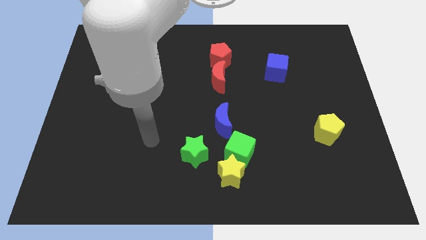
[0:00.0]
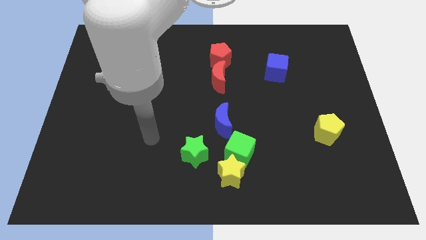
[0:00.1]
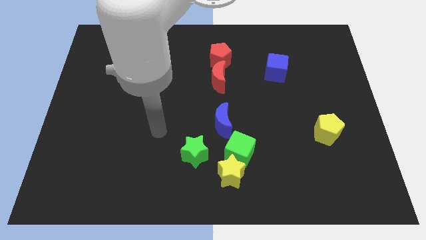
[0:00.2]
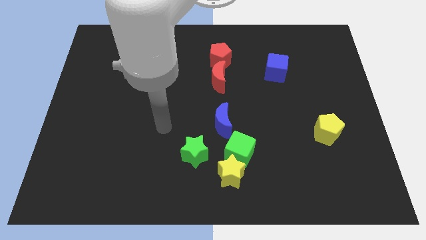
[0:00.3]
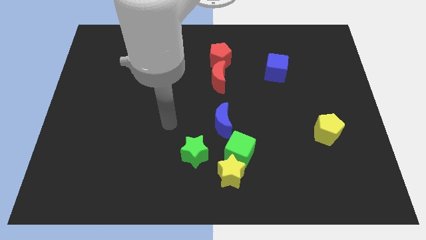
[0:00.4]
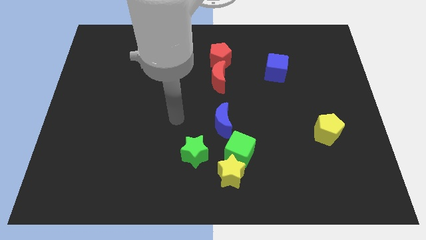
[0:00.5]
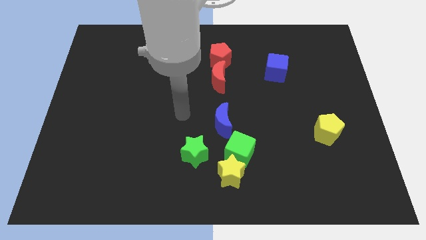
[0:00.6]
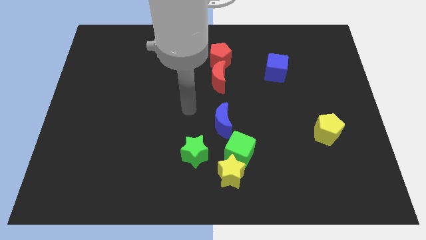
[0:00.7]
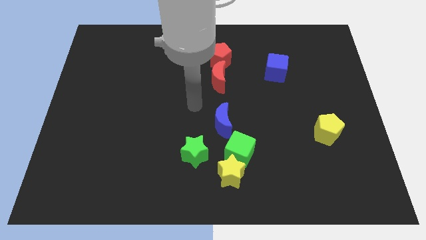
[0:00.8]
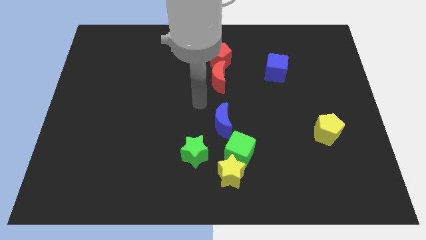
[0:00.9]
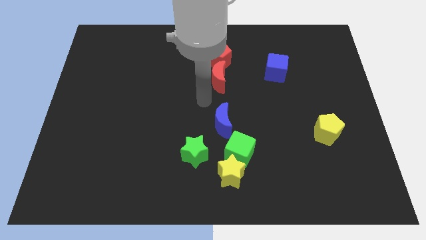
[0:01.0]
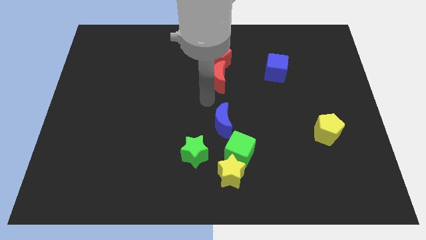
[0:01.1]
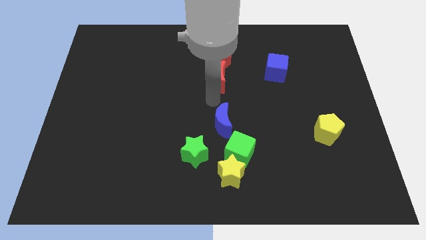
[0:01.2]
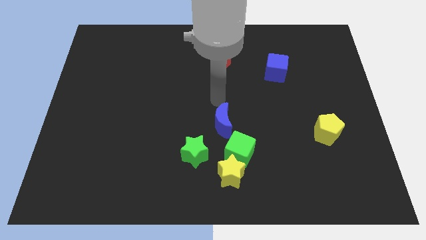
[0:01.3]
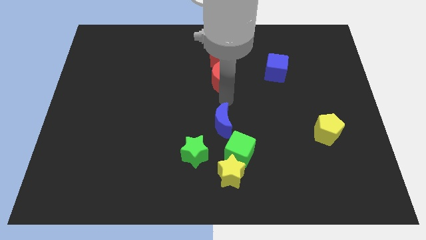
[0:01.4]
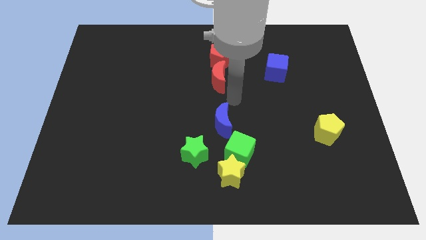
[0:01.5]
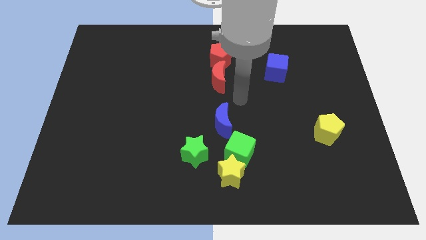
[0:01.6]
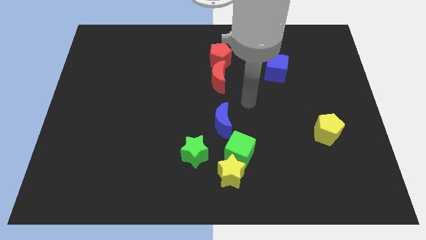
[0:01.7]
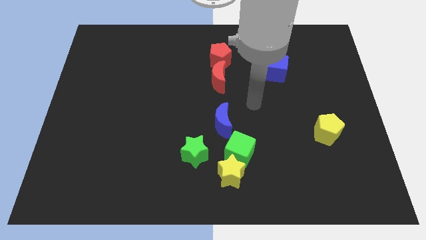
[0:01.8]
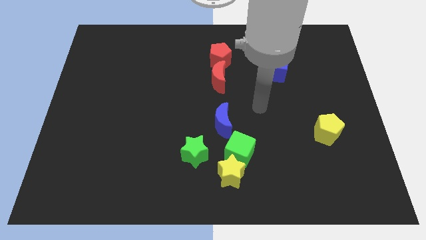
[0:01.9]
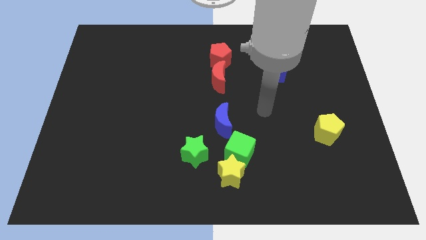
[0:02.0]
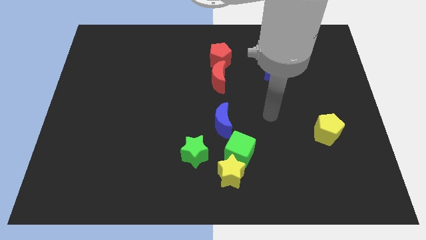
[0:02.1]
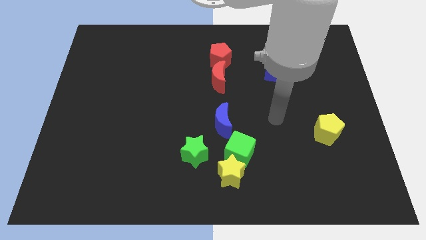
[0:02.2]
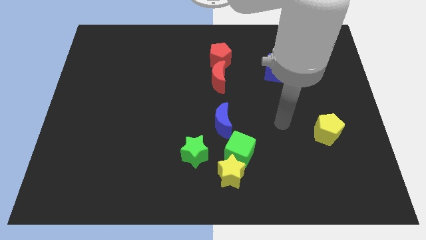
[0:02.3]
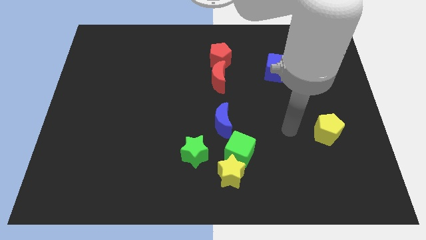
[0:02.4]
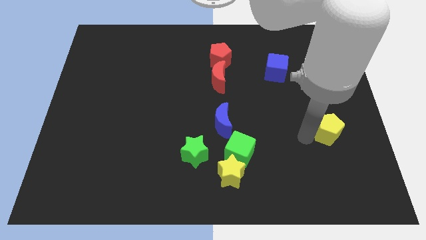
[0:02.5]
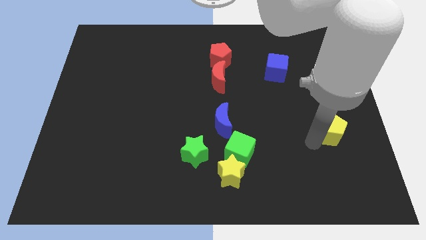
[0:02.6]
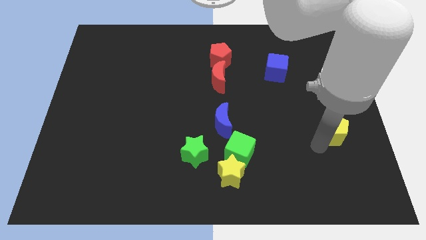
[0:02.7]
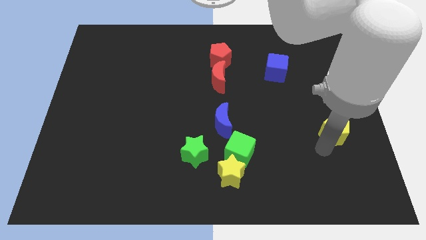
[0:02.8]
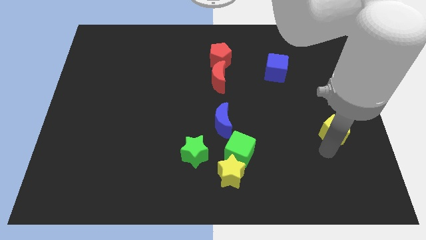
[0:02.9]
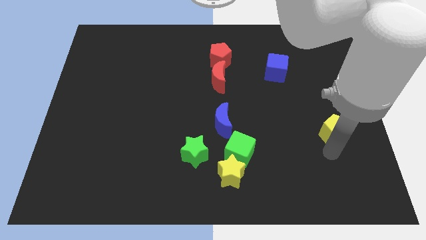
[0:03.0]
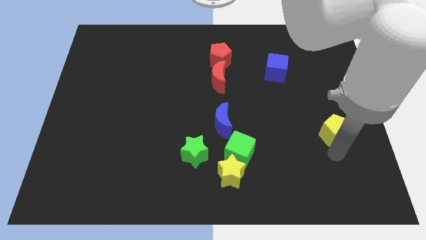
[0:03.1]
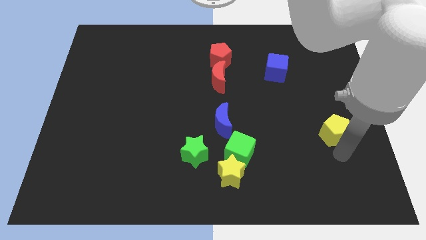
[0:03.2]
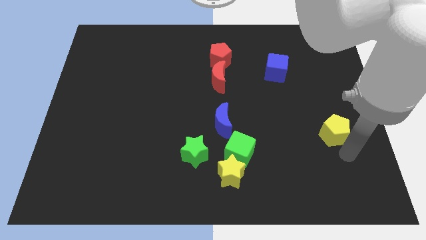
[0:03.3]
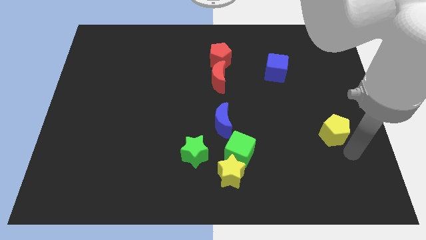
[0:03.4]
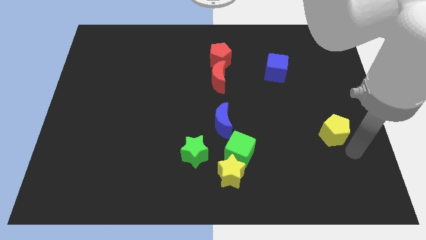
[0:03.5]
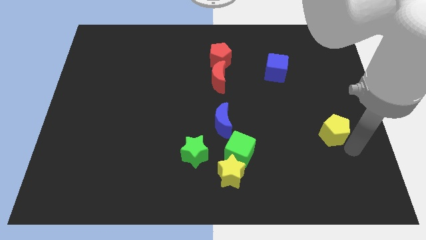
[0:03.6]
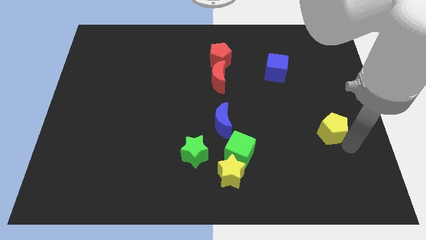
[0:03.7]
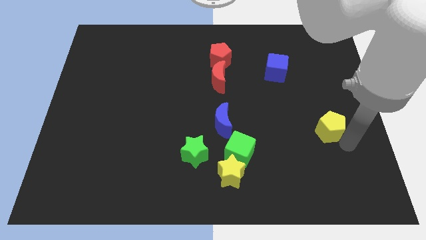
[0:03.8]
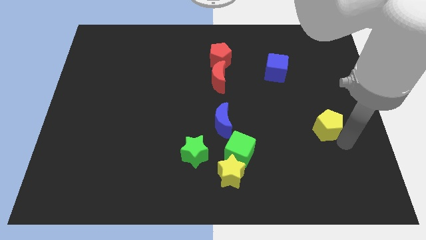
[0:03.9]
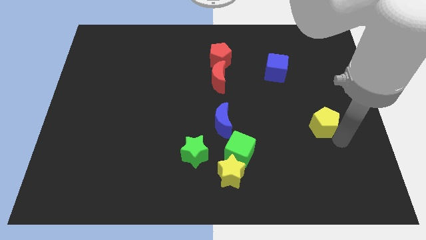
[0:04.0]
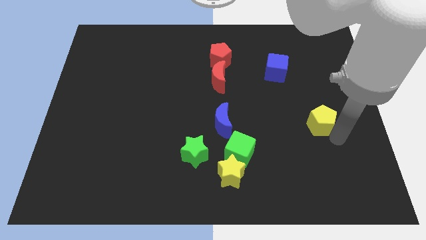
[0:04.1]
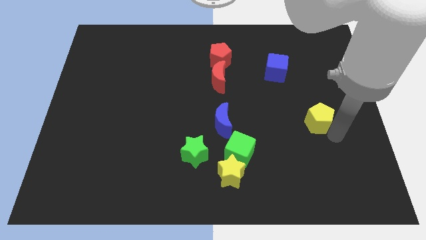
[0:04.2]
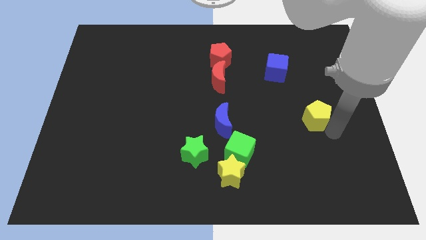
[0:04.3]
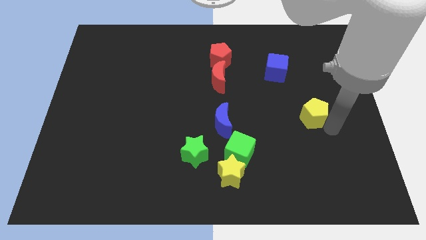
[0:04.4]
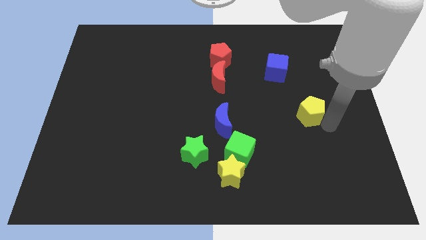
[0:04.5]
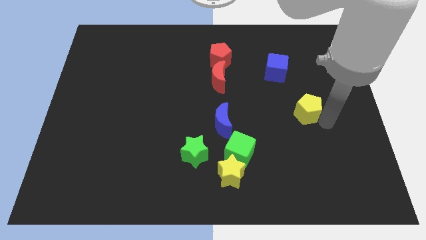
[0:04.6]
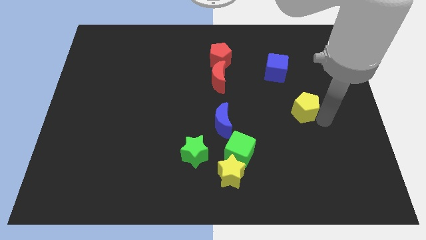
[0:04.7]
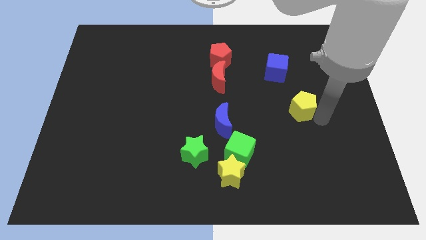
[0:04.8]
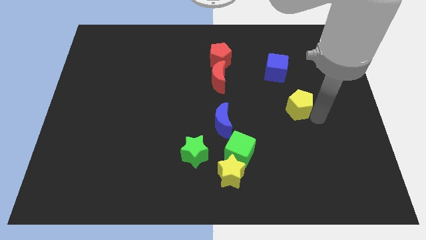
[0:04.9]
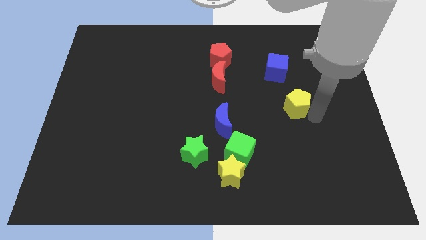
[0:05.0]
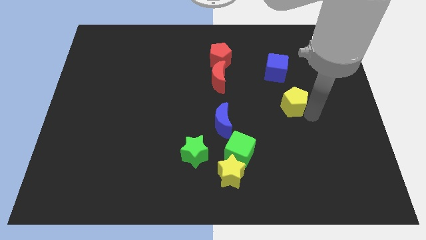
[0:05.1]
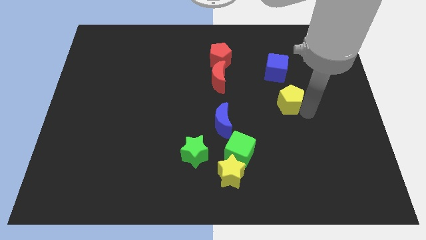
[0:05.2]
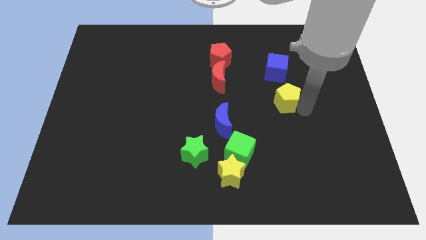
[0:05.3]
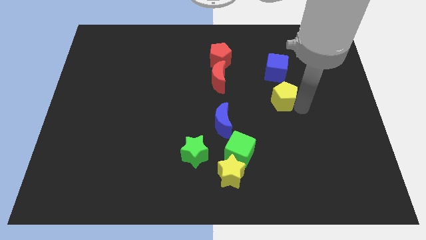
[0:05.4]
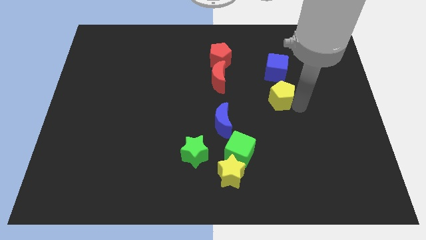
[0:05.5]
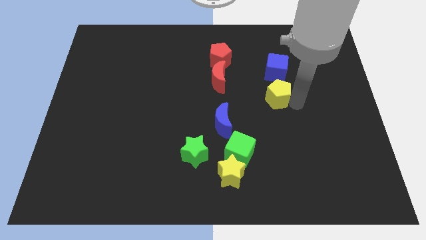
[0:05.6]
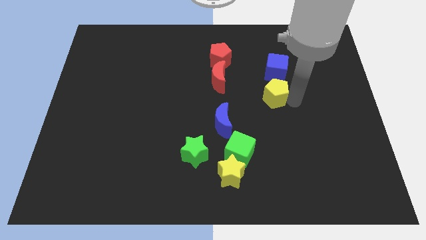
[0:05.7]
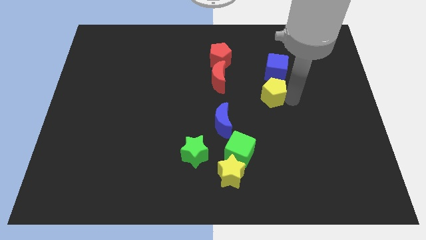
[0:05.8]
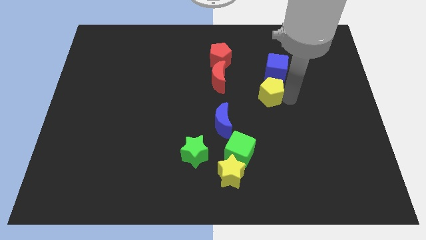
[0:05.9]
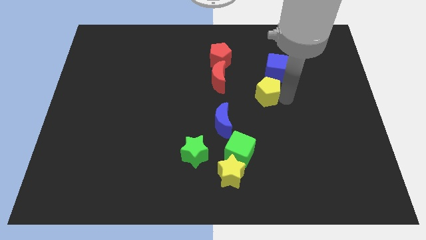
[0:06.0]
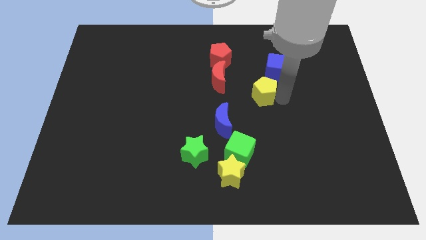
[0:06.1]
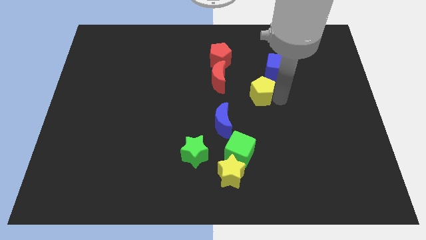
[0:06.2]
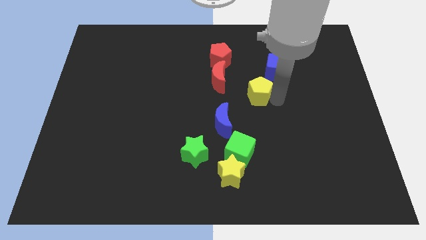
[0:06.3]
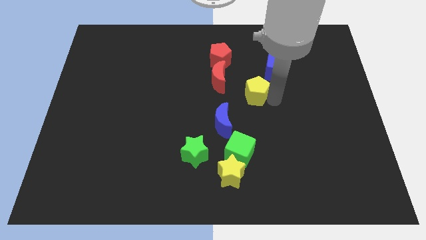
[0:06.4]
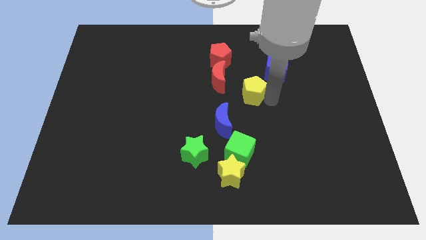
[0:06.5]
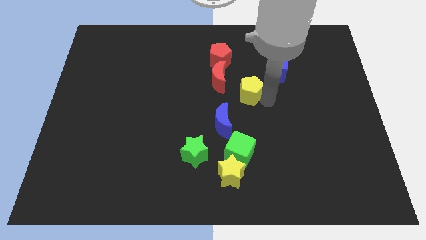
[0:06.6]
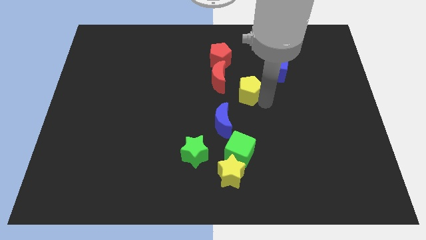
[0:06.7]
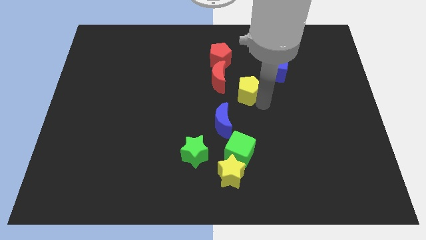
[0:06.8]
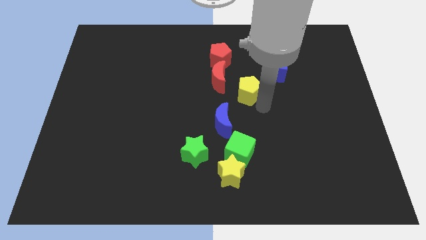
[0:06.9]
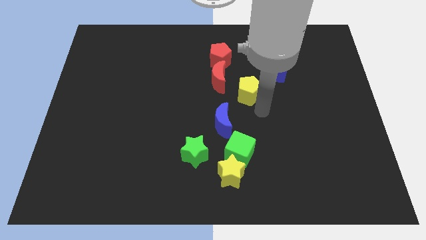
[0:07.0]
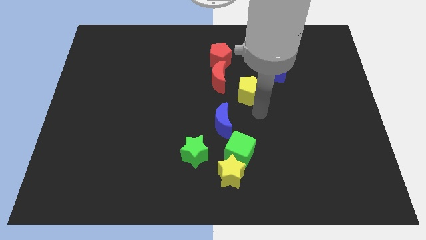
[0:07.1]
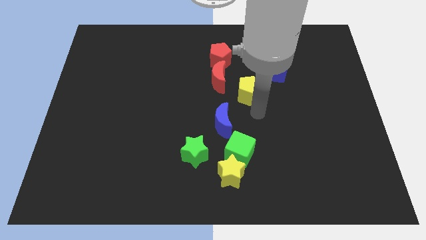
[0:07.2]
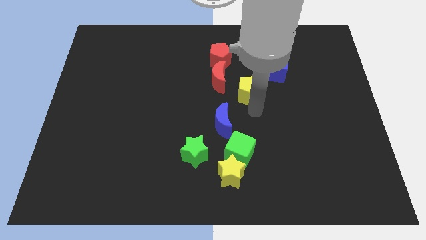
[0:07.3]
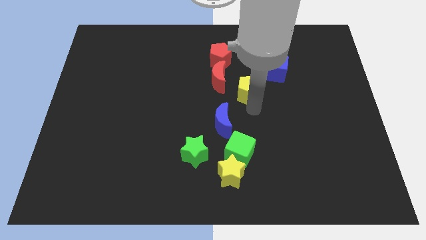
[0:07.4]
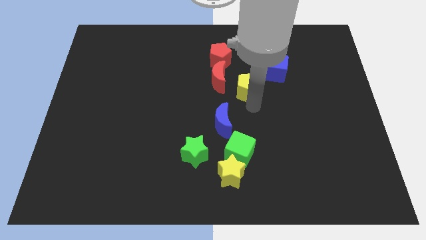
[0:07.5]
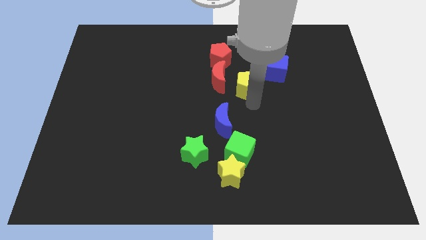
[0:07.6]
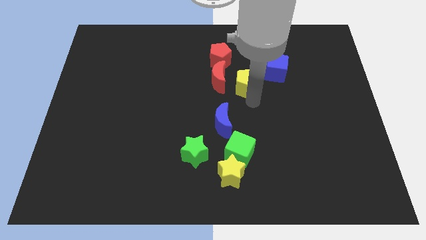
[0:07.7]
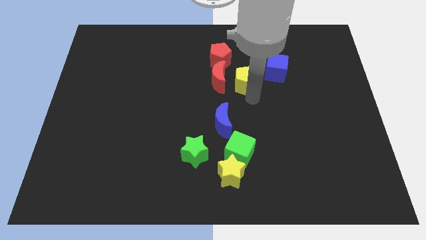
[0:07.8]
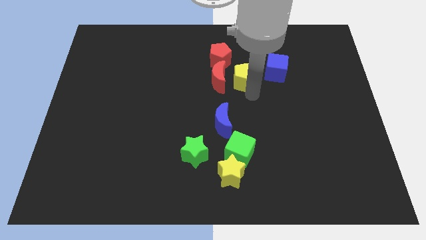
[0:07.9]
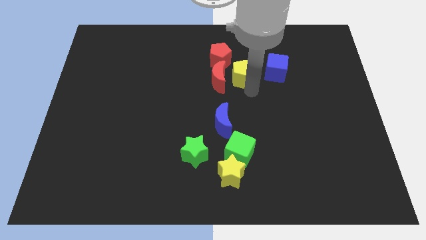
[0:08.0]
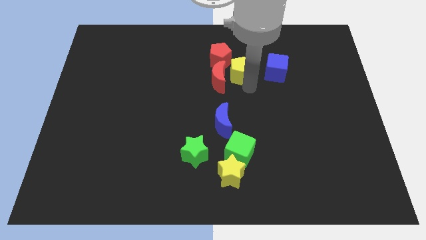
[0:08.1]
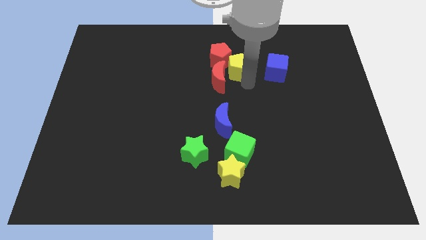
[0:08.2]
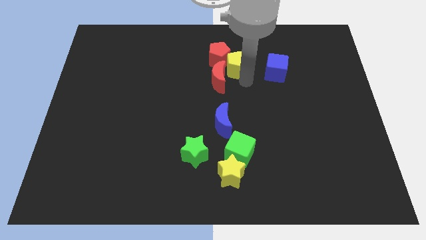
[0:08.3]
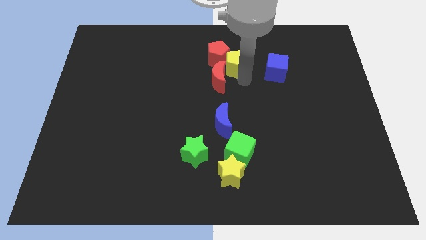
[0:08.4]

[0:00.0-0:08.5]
slide the yellow pentagon towards the red pentagon

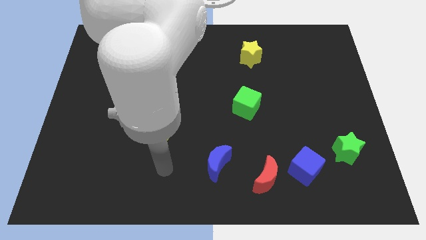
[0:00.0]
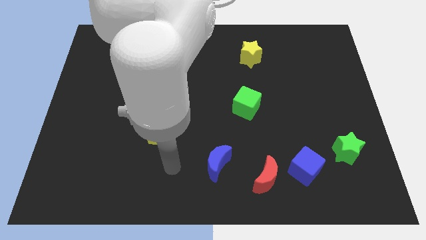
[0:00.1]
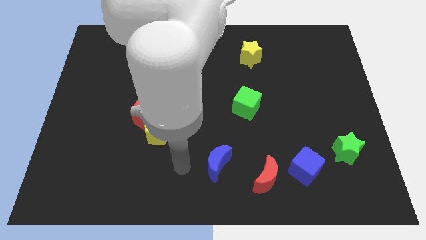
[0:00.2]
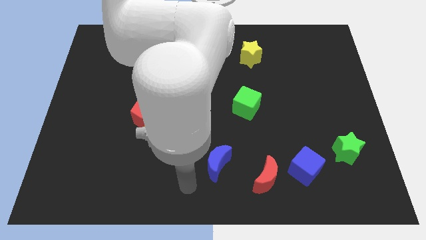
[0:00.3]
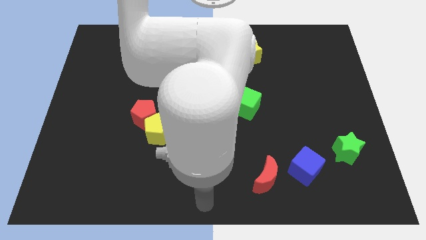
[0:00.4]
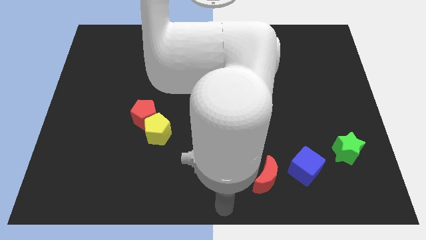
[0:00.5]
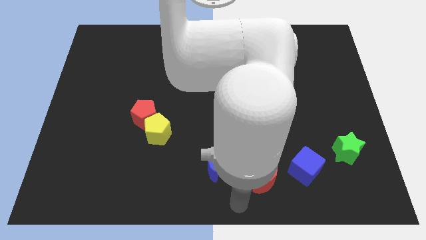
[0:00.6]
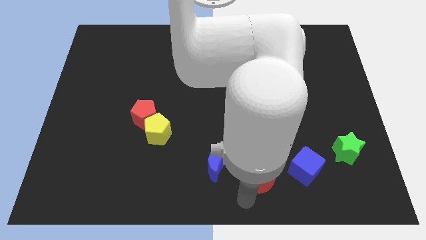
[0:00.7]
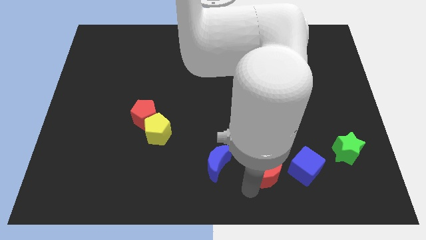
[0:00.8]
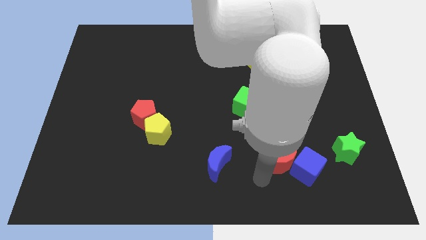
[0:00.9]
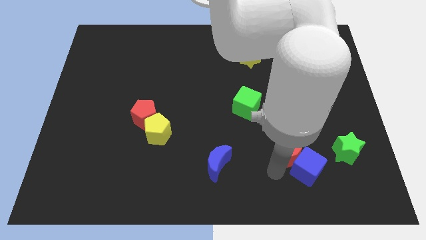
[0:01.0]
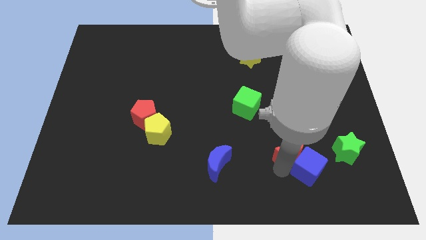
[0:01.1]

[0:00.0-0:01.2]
put the red moon close to the blue cube
